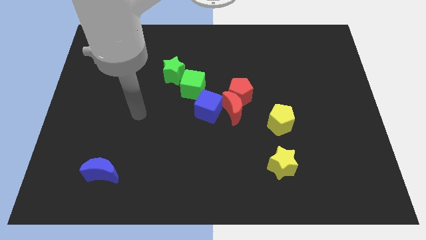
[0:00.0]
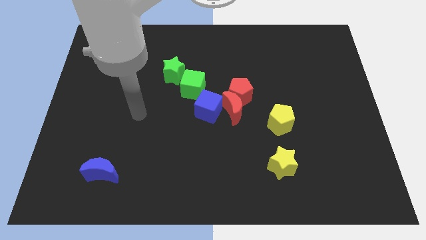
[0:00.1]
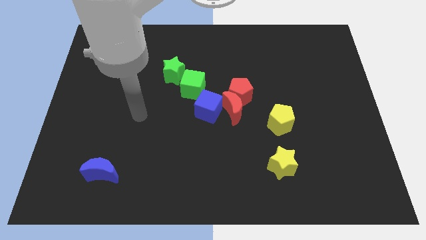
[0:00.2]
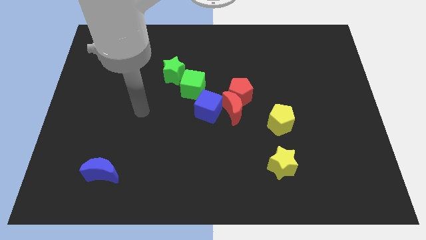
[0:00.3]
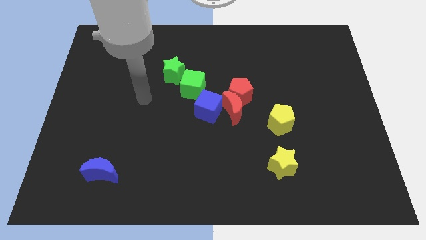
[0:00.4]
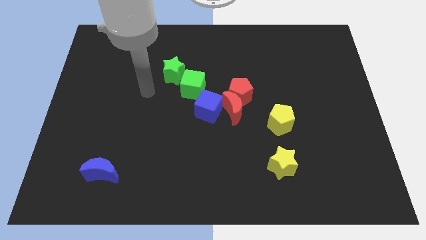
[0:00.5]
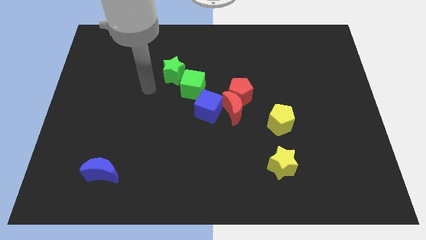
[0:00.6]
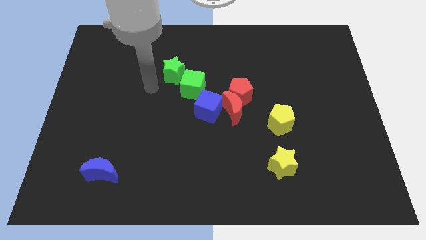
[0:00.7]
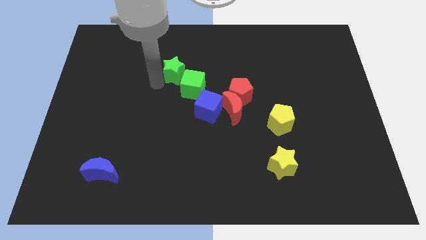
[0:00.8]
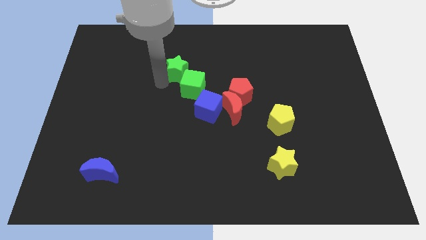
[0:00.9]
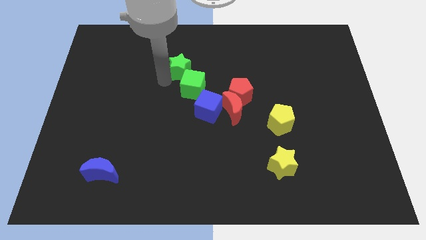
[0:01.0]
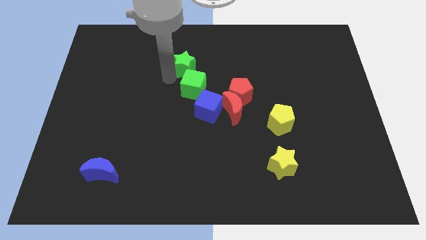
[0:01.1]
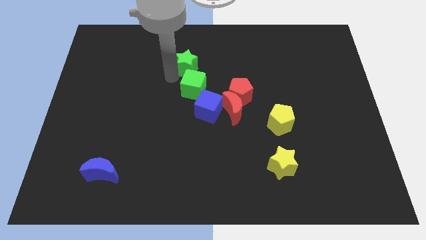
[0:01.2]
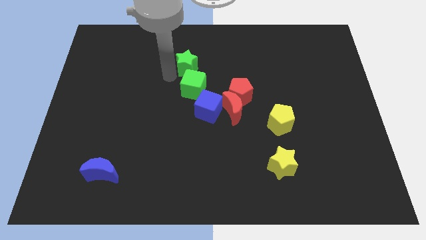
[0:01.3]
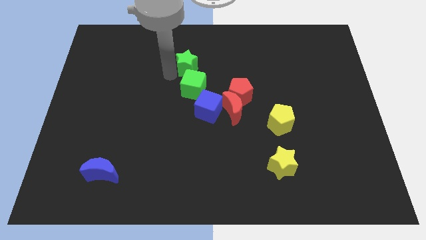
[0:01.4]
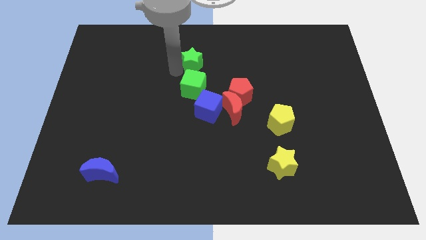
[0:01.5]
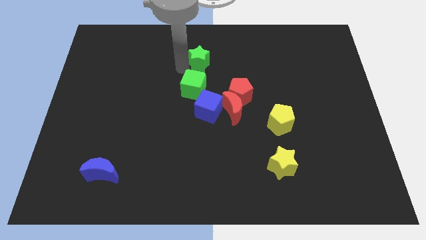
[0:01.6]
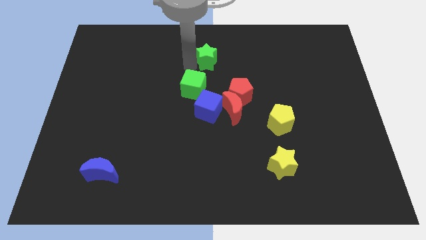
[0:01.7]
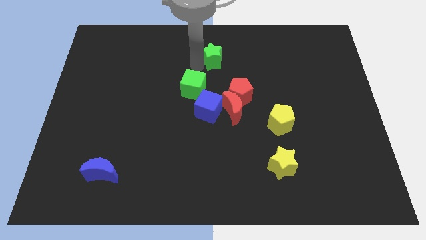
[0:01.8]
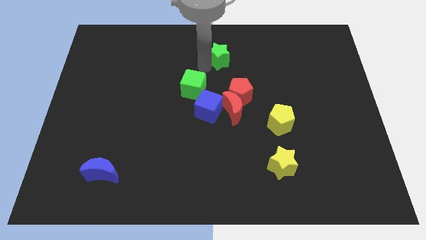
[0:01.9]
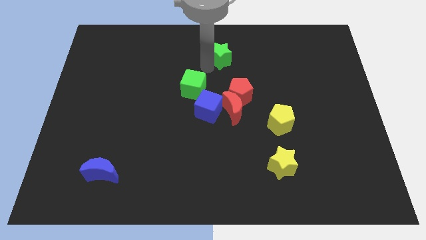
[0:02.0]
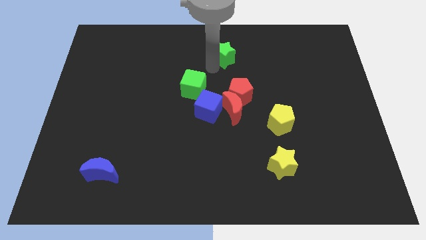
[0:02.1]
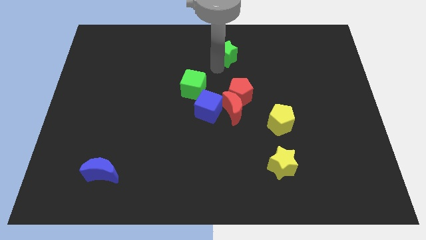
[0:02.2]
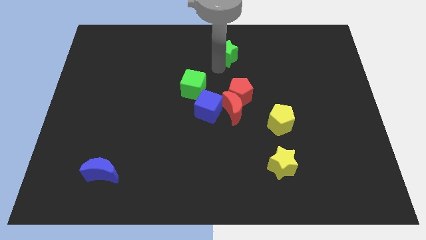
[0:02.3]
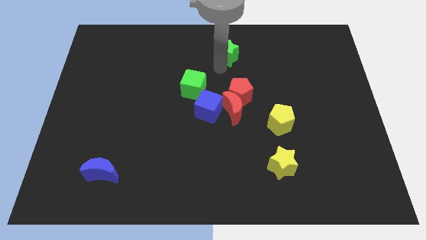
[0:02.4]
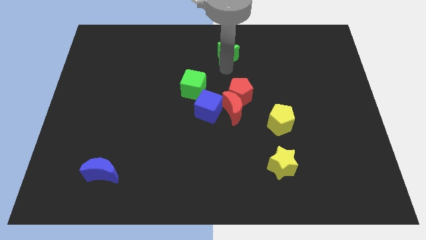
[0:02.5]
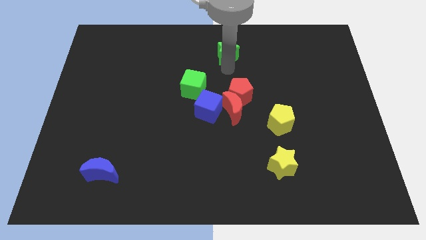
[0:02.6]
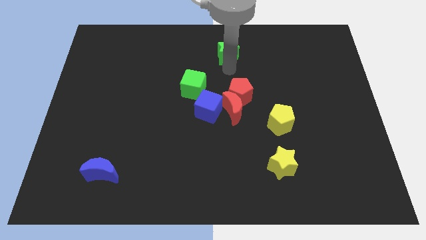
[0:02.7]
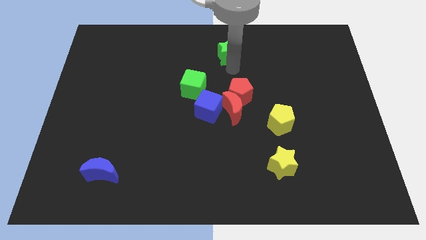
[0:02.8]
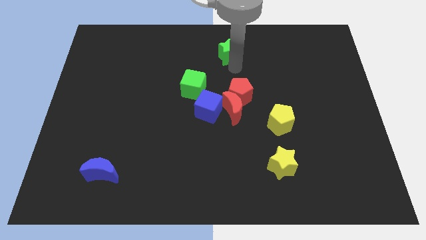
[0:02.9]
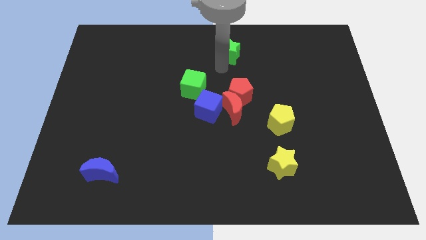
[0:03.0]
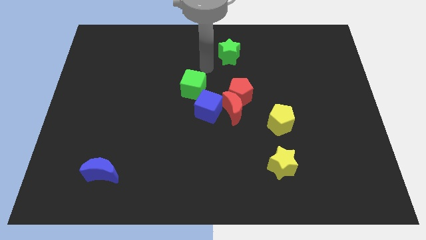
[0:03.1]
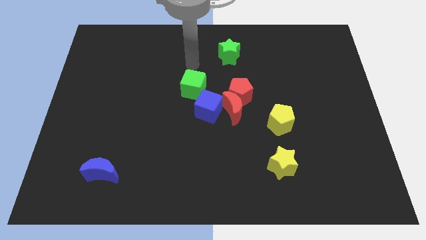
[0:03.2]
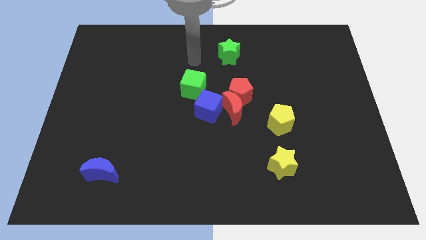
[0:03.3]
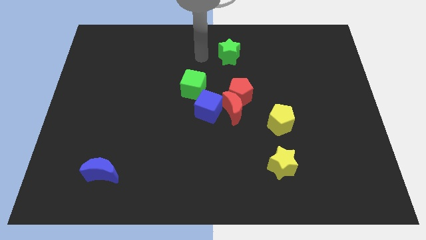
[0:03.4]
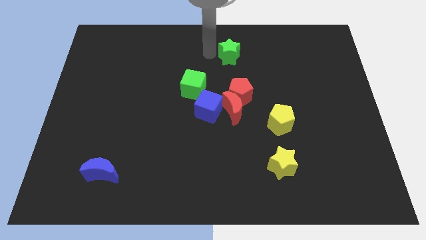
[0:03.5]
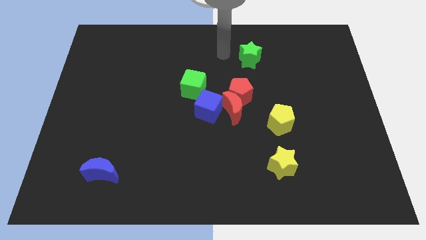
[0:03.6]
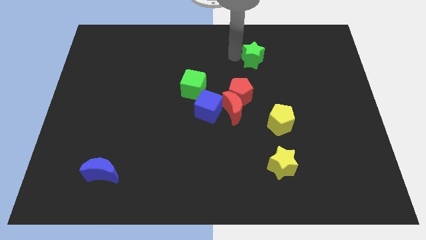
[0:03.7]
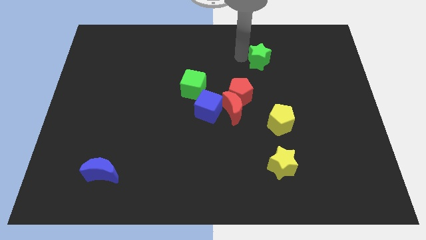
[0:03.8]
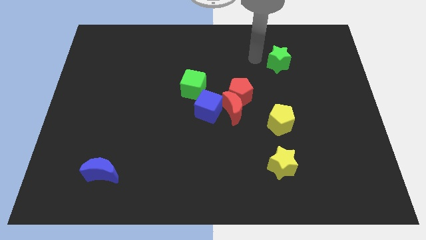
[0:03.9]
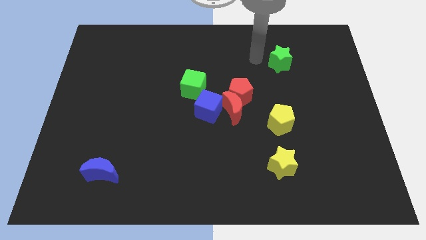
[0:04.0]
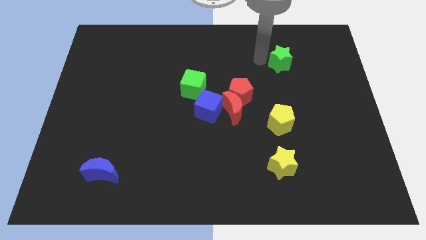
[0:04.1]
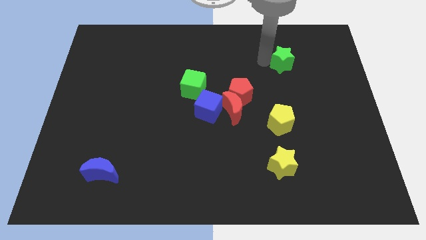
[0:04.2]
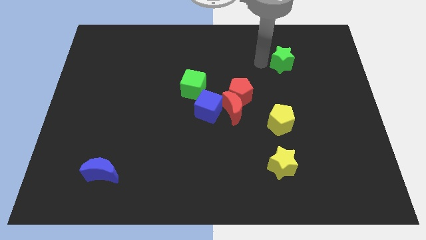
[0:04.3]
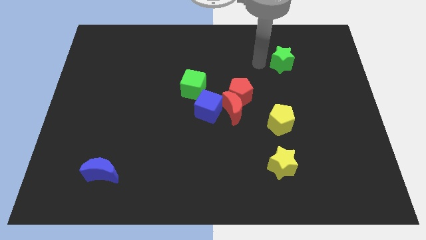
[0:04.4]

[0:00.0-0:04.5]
move the green star diagonally top right to the red pentagon

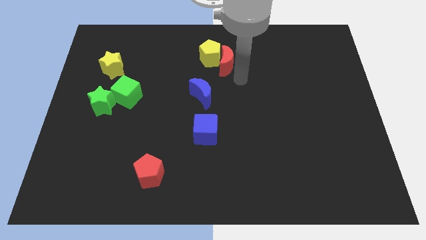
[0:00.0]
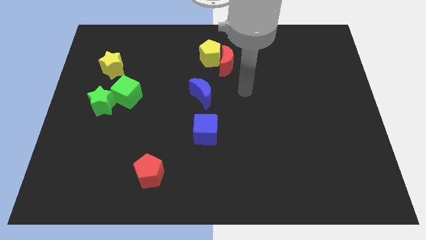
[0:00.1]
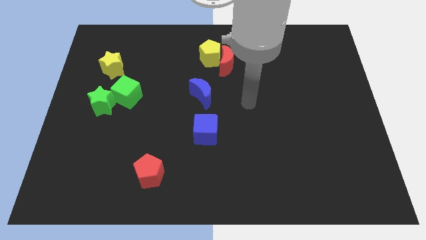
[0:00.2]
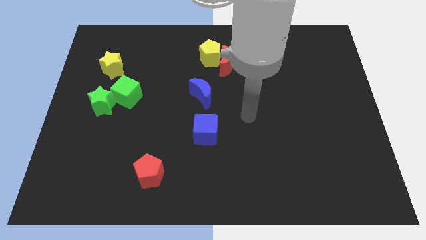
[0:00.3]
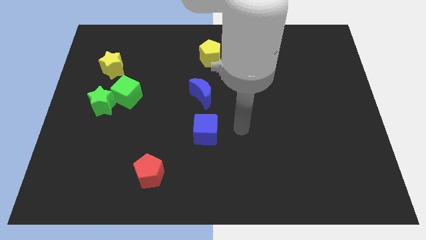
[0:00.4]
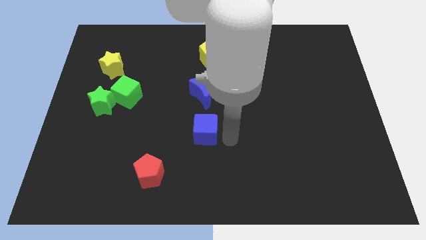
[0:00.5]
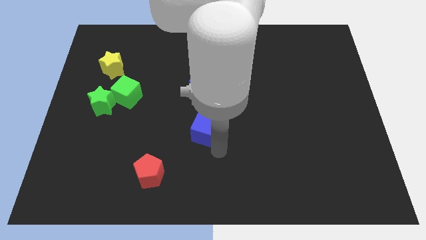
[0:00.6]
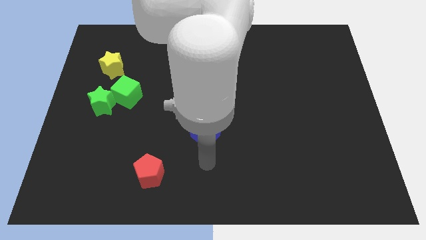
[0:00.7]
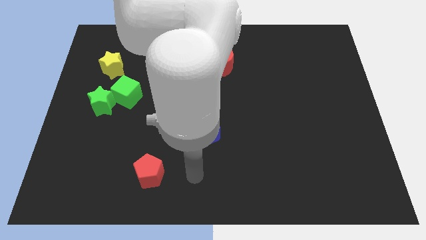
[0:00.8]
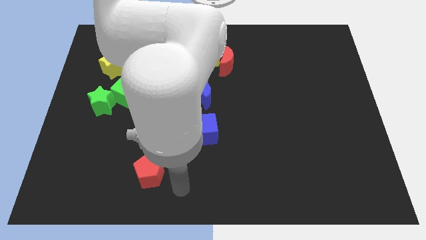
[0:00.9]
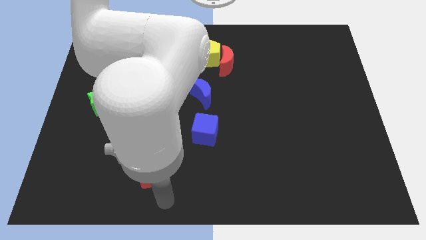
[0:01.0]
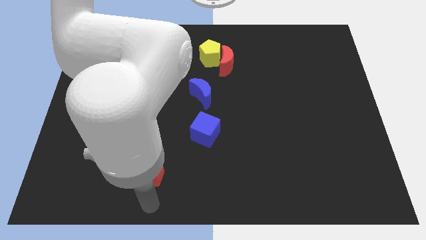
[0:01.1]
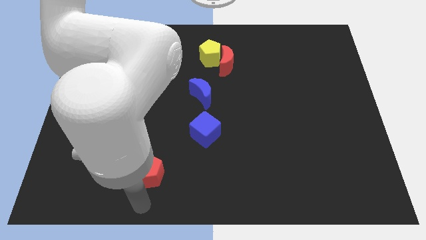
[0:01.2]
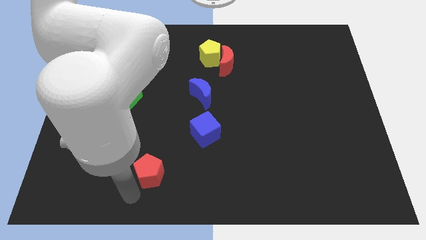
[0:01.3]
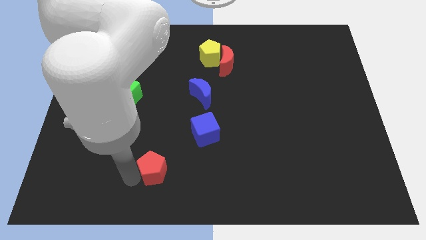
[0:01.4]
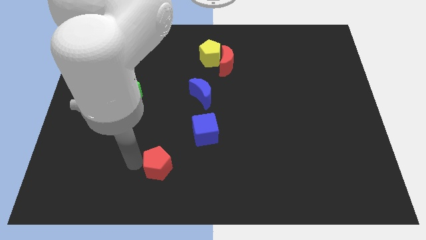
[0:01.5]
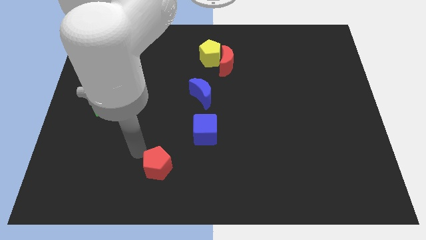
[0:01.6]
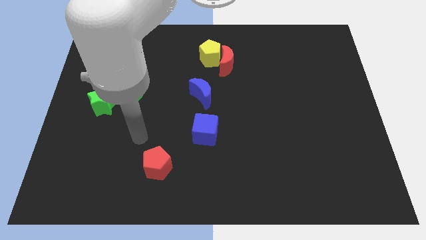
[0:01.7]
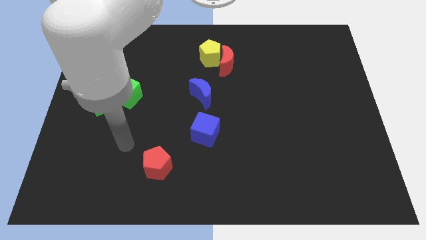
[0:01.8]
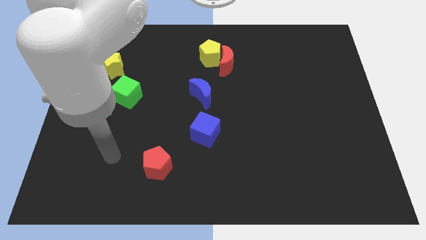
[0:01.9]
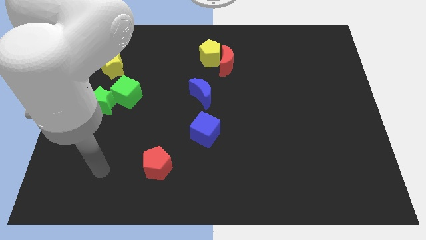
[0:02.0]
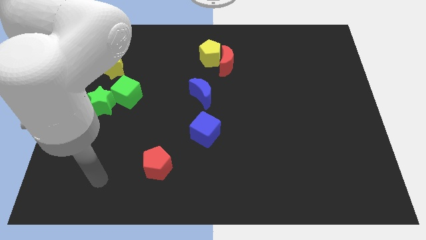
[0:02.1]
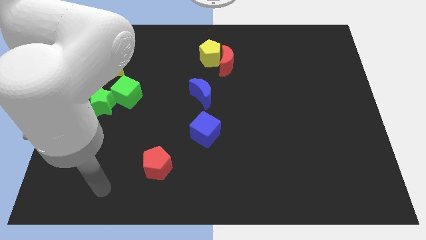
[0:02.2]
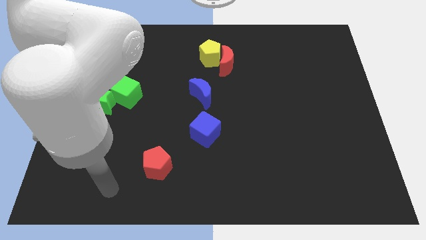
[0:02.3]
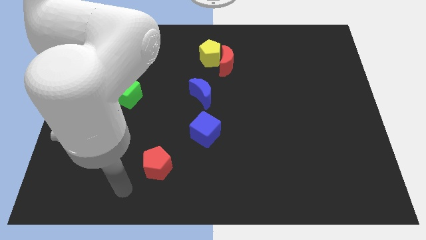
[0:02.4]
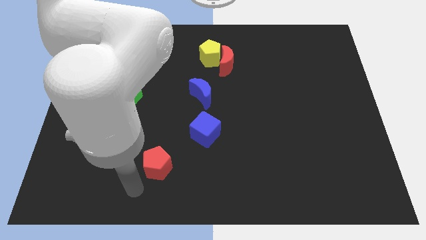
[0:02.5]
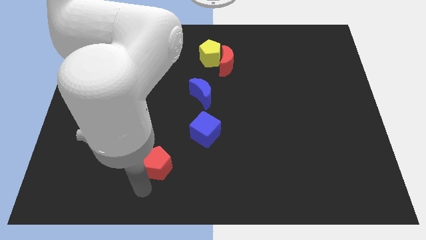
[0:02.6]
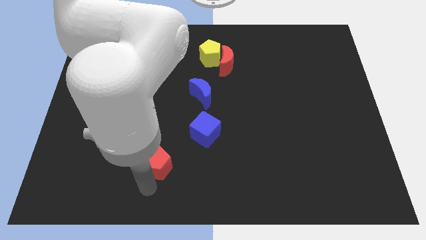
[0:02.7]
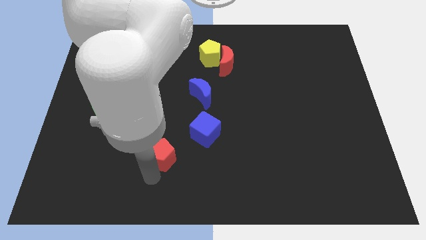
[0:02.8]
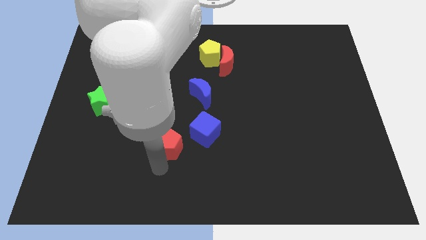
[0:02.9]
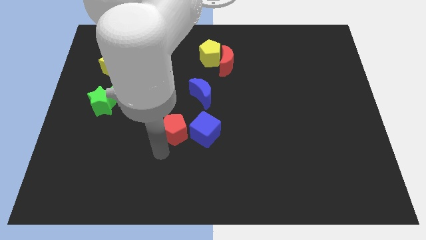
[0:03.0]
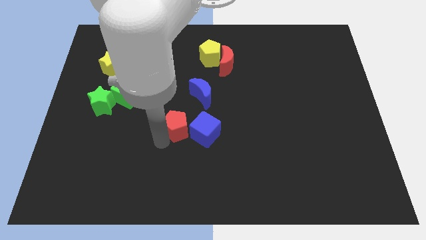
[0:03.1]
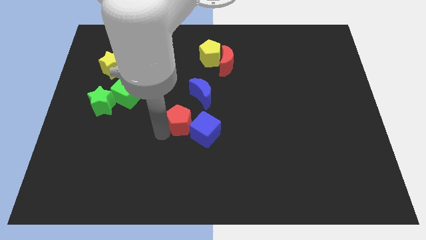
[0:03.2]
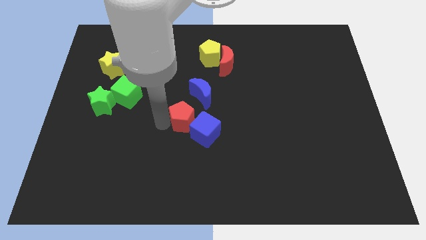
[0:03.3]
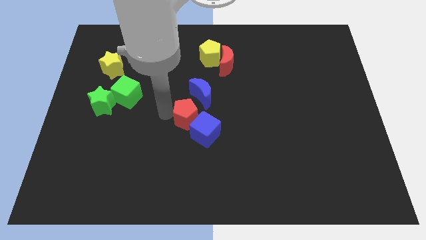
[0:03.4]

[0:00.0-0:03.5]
move red pentagon to the top of blue cube

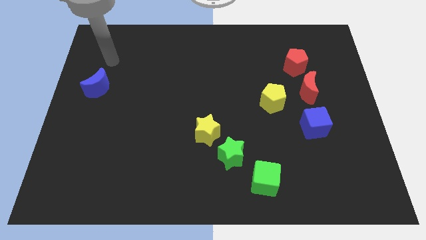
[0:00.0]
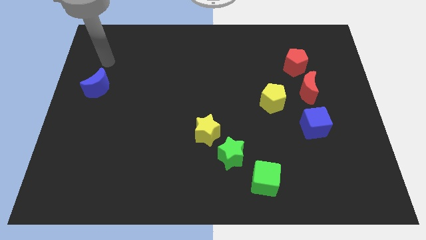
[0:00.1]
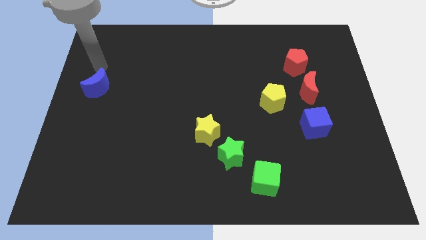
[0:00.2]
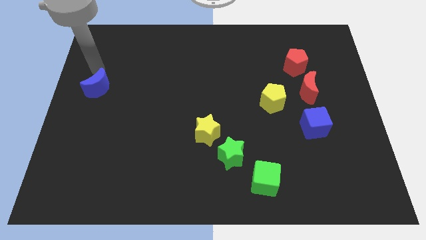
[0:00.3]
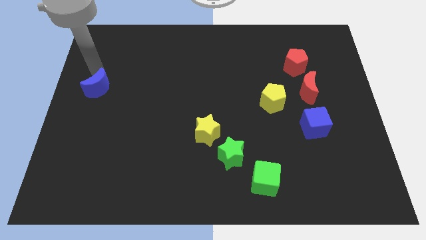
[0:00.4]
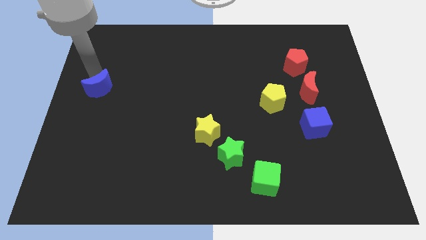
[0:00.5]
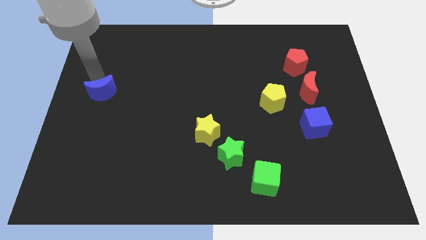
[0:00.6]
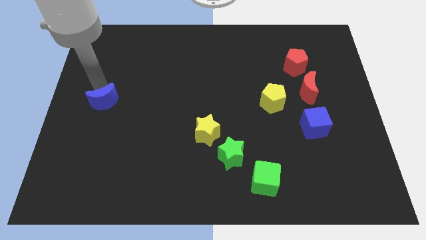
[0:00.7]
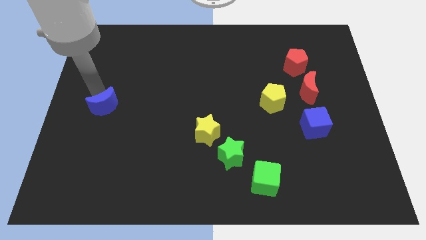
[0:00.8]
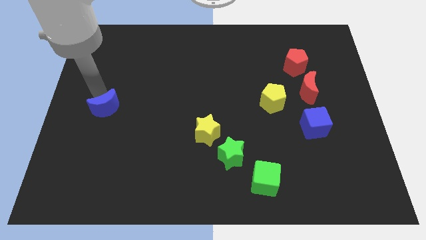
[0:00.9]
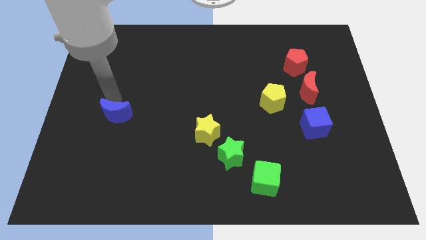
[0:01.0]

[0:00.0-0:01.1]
move the blue moon slightly downwards
